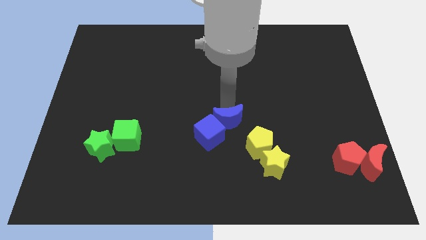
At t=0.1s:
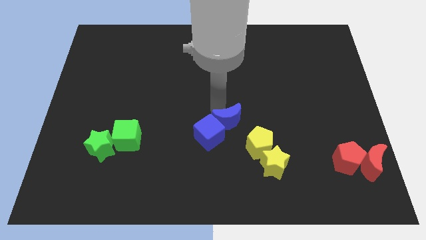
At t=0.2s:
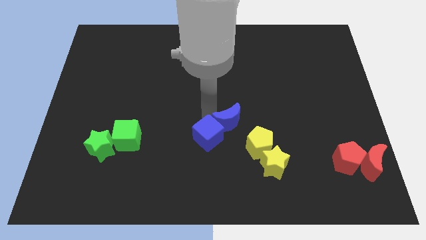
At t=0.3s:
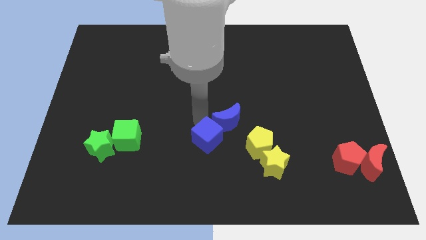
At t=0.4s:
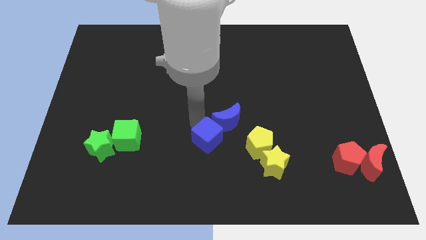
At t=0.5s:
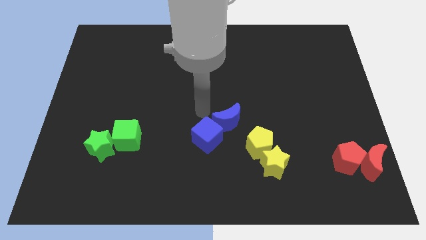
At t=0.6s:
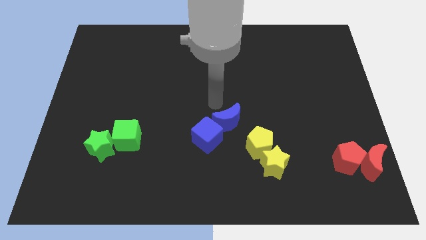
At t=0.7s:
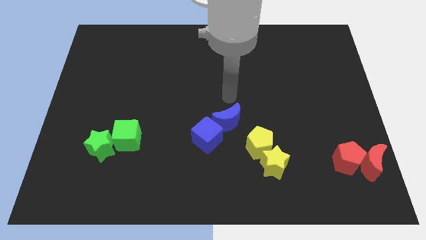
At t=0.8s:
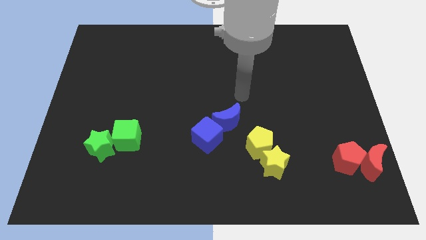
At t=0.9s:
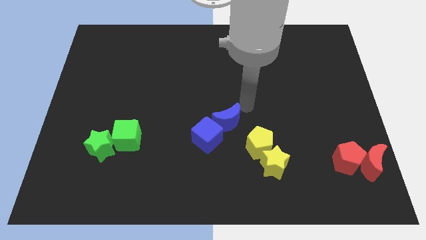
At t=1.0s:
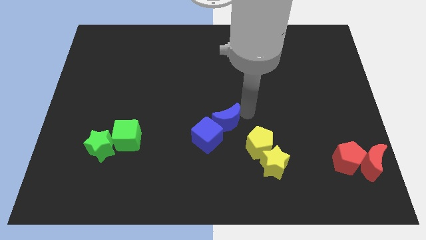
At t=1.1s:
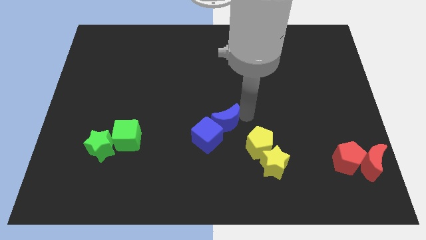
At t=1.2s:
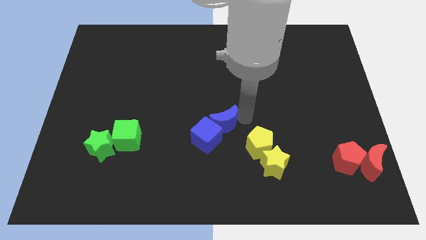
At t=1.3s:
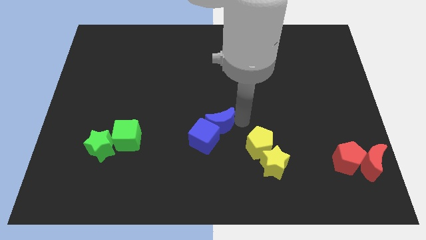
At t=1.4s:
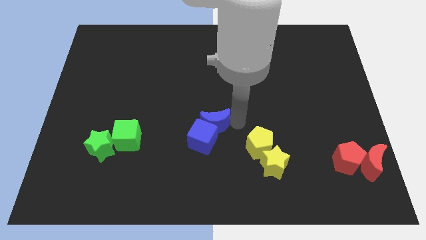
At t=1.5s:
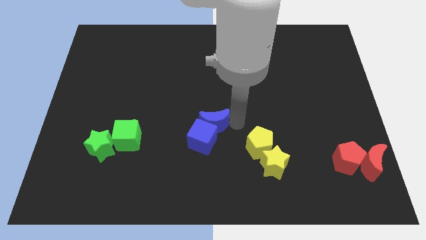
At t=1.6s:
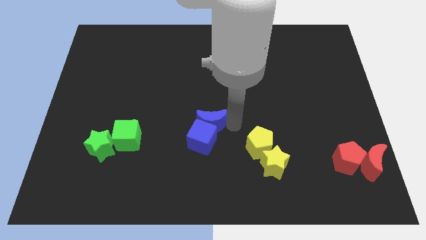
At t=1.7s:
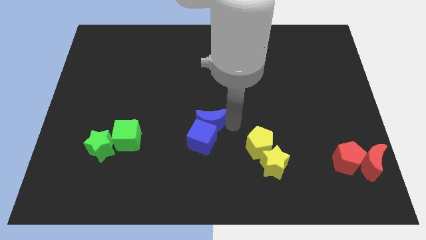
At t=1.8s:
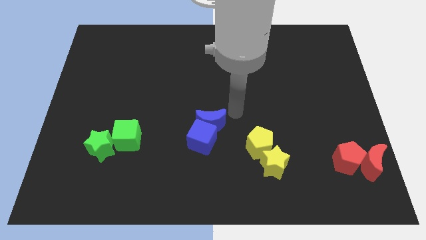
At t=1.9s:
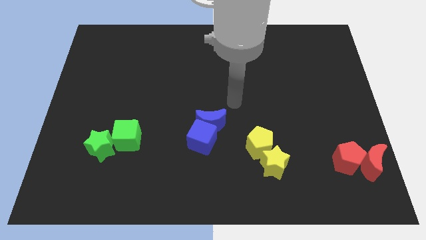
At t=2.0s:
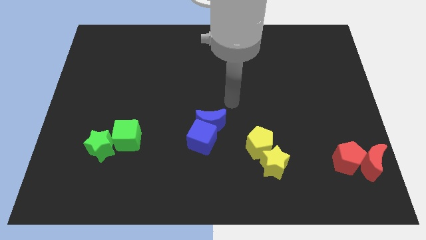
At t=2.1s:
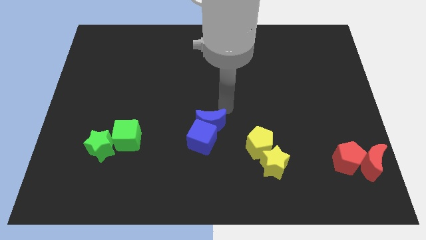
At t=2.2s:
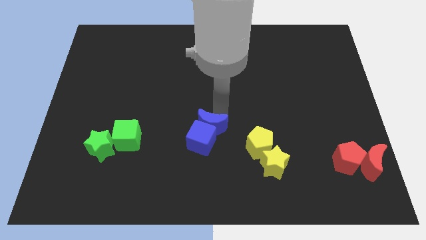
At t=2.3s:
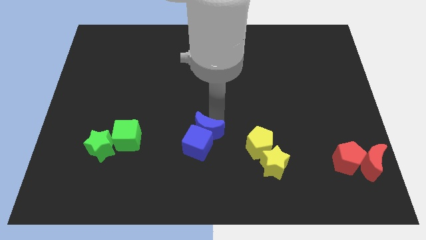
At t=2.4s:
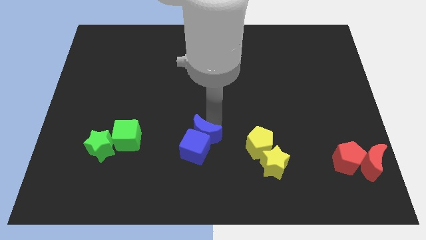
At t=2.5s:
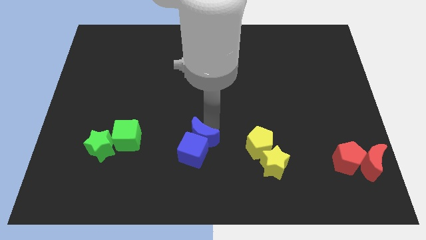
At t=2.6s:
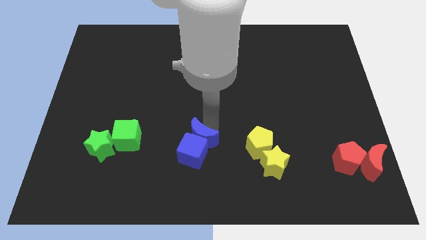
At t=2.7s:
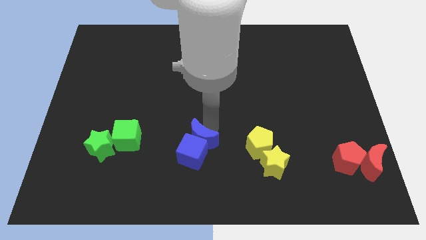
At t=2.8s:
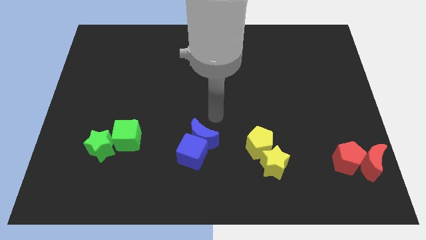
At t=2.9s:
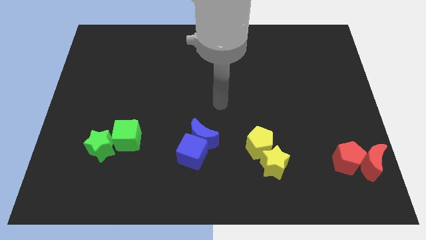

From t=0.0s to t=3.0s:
move blue crescent along with blue cube to the bottom center

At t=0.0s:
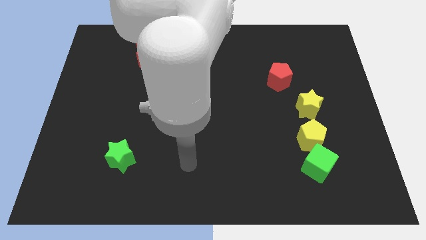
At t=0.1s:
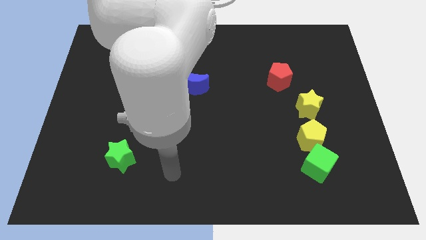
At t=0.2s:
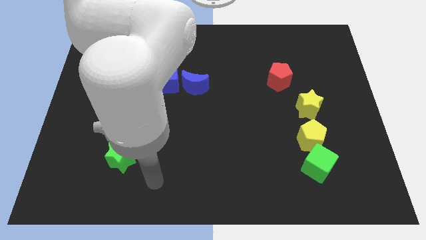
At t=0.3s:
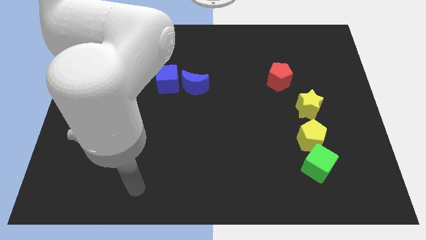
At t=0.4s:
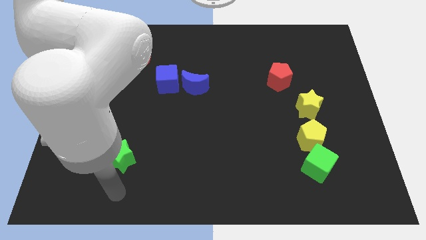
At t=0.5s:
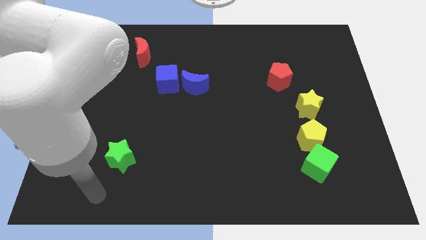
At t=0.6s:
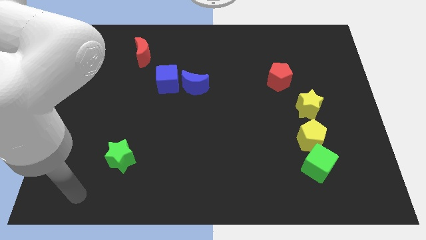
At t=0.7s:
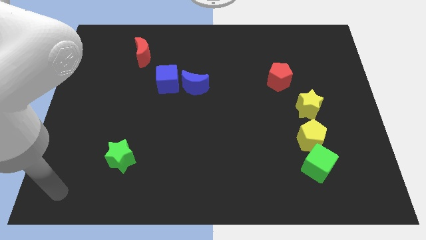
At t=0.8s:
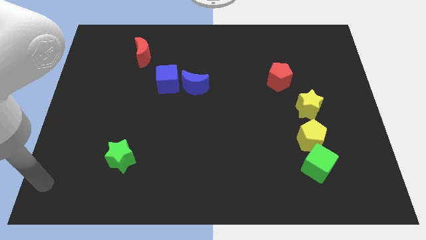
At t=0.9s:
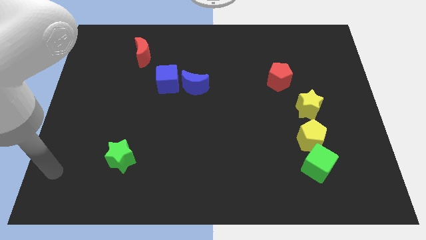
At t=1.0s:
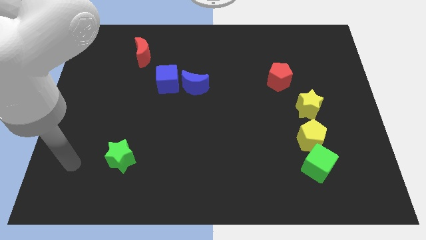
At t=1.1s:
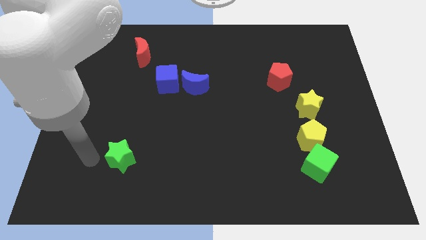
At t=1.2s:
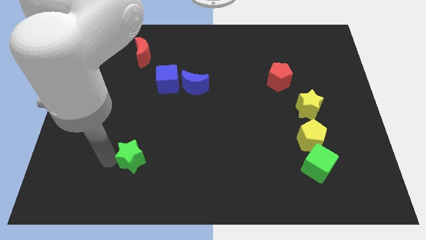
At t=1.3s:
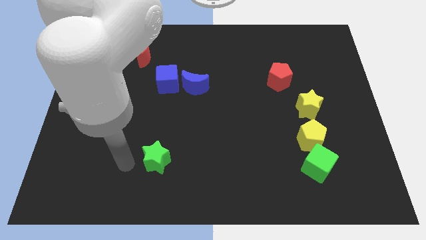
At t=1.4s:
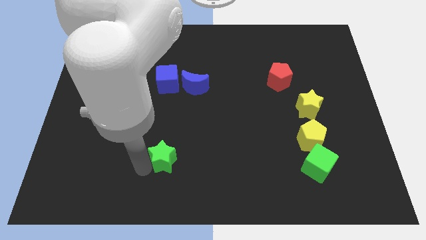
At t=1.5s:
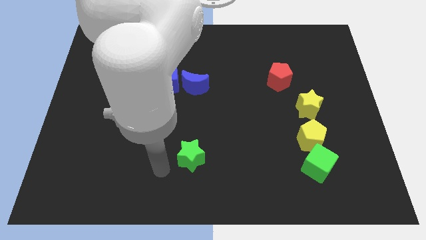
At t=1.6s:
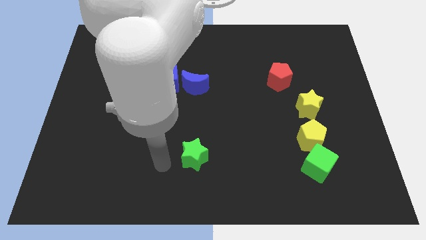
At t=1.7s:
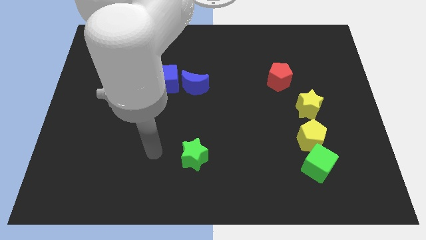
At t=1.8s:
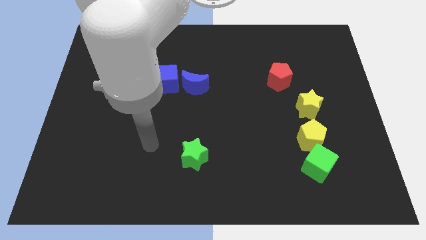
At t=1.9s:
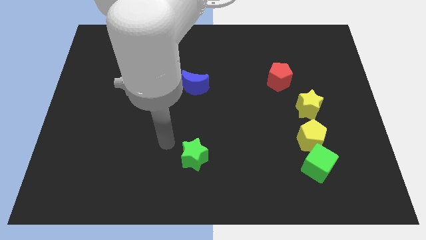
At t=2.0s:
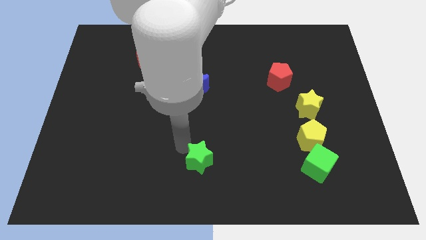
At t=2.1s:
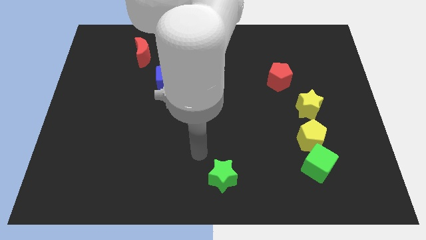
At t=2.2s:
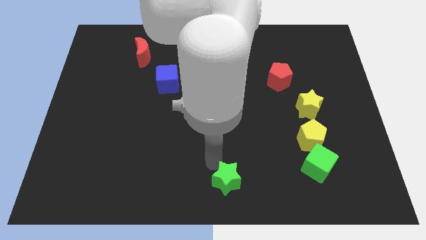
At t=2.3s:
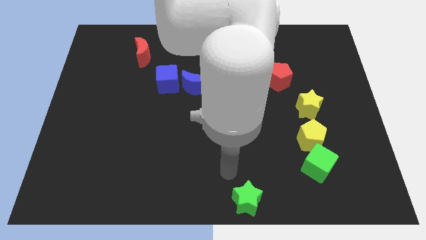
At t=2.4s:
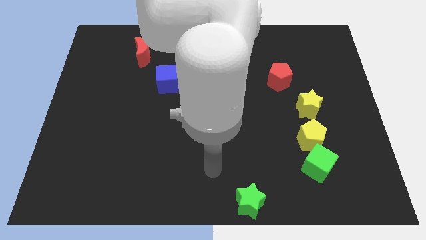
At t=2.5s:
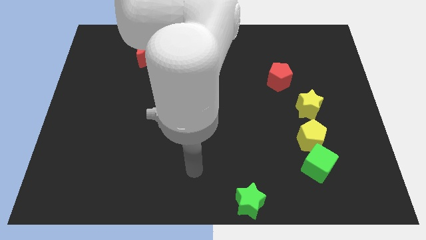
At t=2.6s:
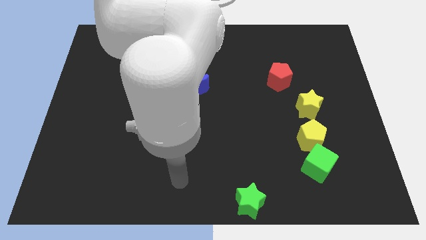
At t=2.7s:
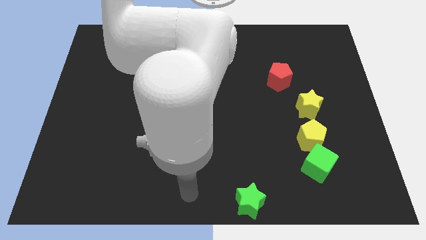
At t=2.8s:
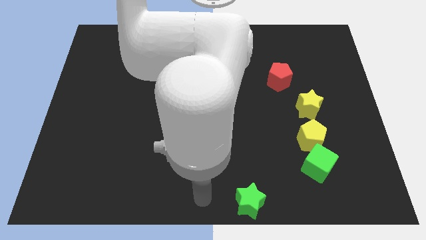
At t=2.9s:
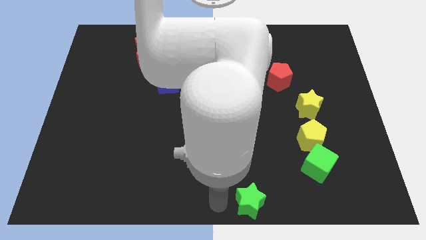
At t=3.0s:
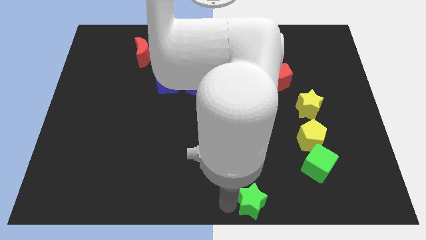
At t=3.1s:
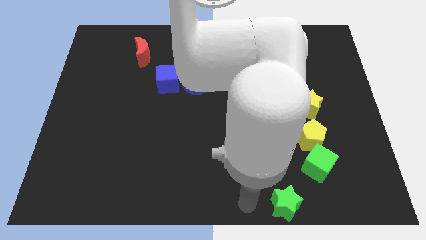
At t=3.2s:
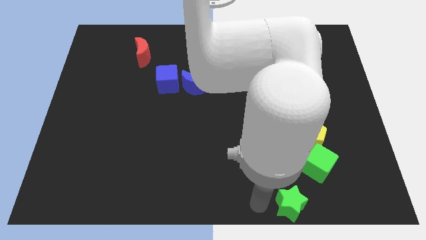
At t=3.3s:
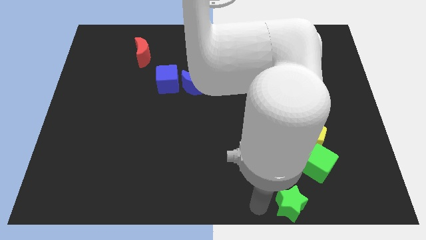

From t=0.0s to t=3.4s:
push the green star towards the right side of the board

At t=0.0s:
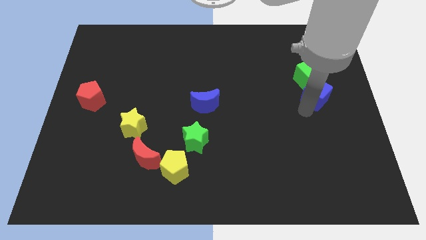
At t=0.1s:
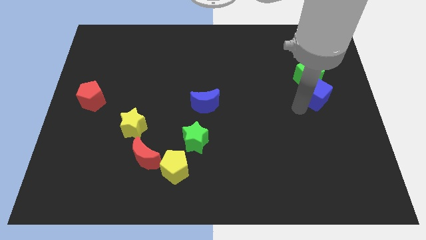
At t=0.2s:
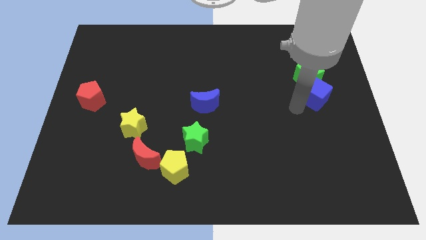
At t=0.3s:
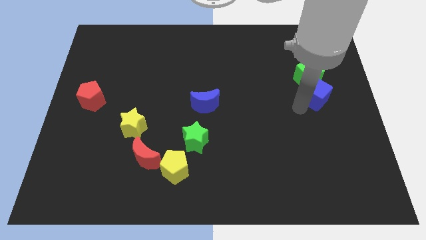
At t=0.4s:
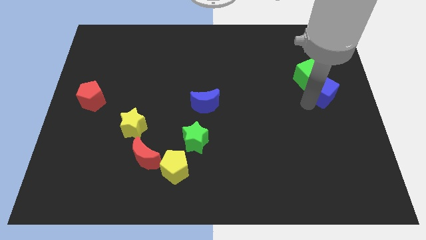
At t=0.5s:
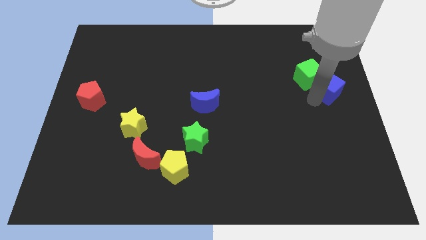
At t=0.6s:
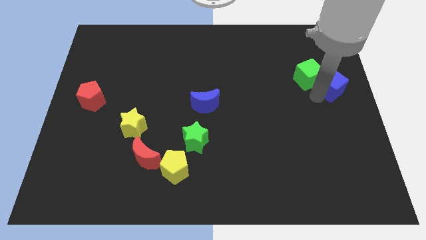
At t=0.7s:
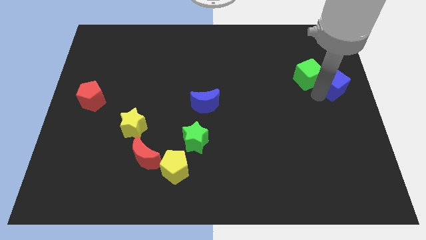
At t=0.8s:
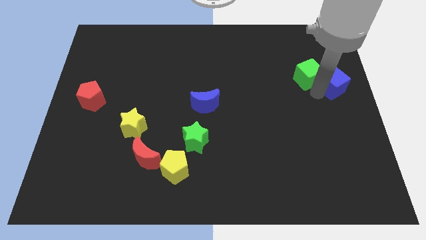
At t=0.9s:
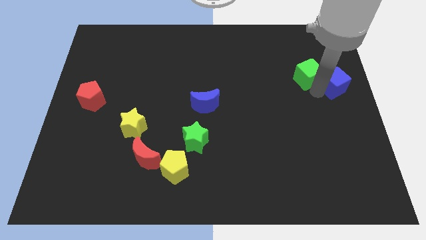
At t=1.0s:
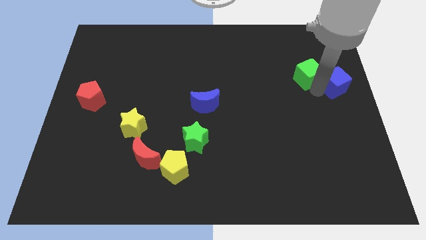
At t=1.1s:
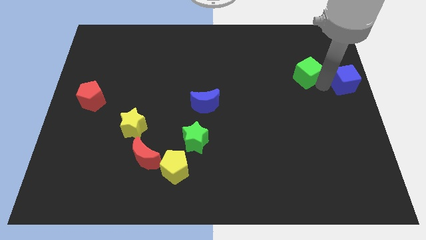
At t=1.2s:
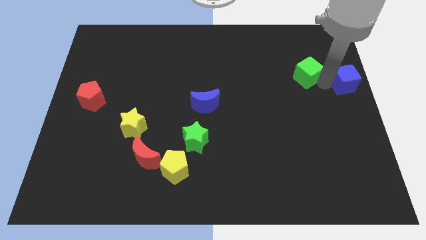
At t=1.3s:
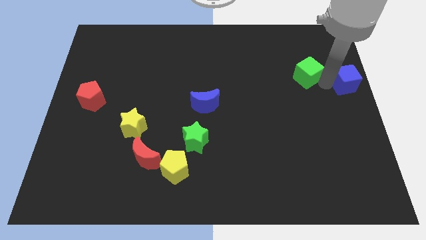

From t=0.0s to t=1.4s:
move the blue cube to the right of the green cube

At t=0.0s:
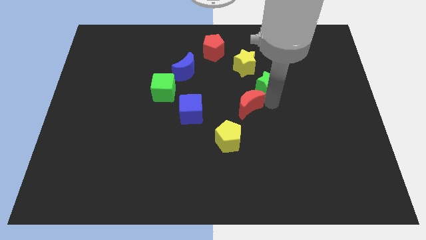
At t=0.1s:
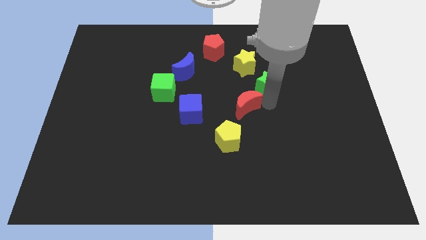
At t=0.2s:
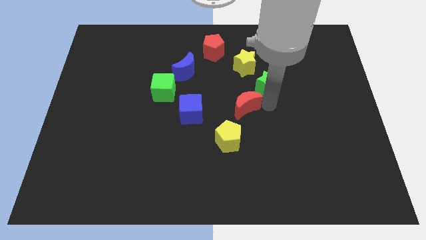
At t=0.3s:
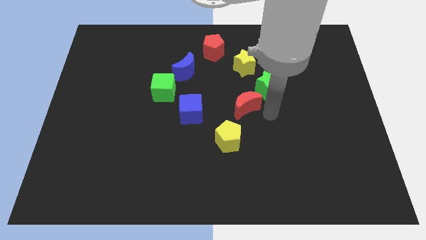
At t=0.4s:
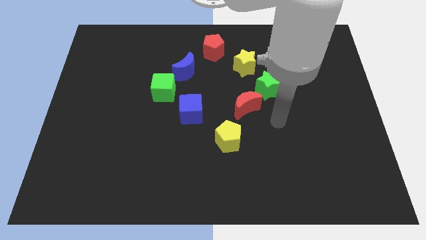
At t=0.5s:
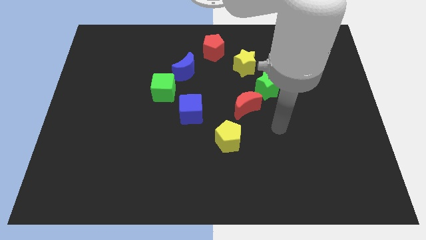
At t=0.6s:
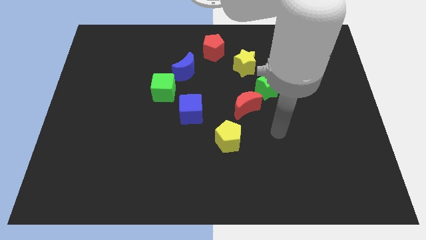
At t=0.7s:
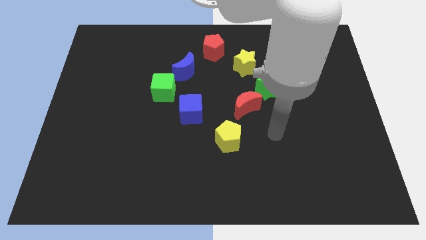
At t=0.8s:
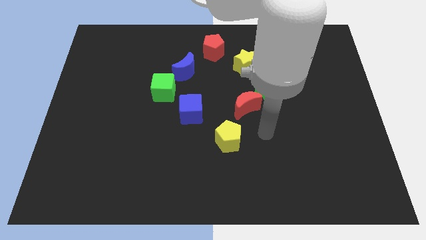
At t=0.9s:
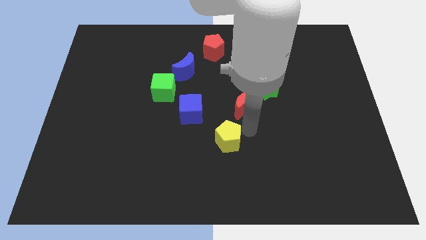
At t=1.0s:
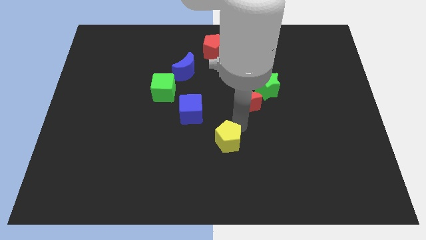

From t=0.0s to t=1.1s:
slightly push the red crescent on the board
